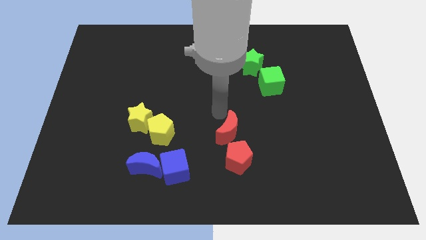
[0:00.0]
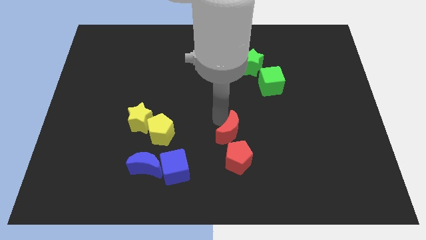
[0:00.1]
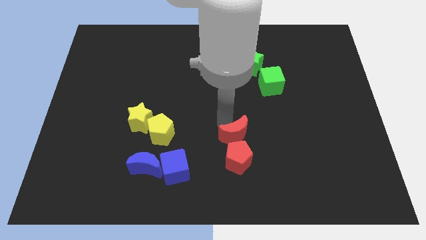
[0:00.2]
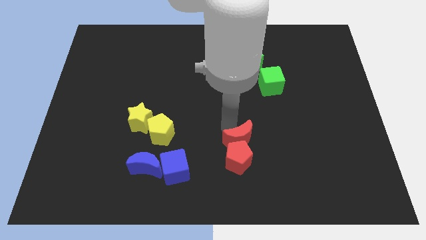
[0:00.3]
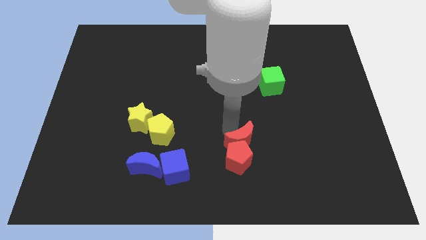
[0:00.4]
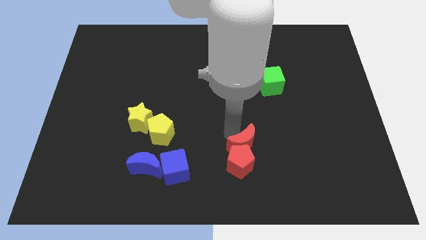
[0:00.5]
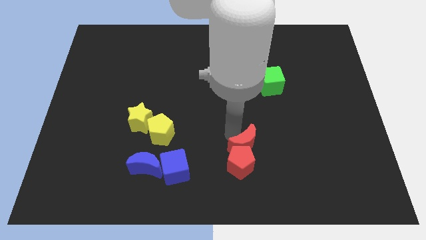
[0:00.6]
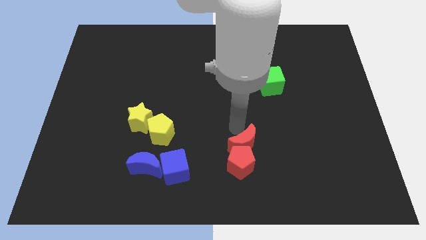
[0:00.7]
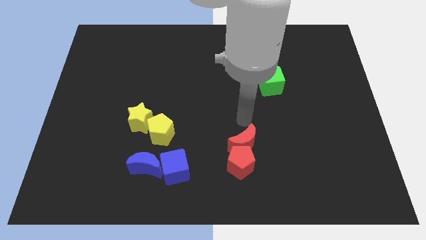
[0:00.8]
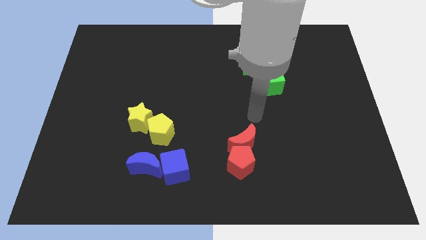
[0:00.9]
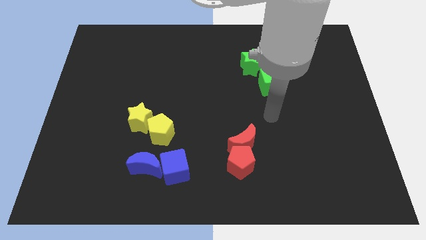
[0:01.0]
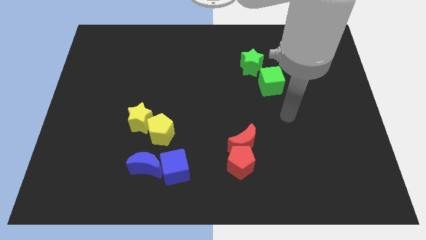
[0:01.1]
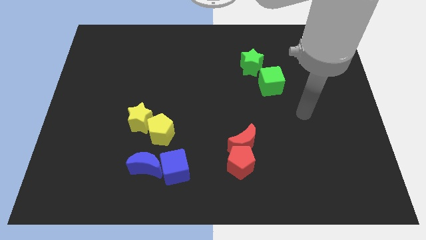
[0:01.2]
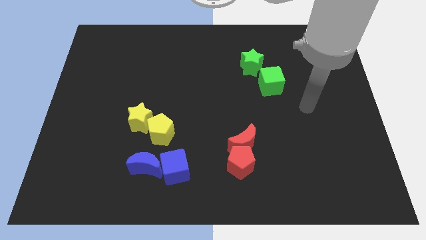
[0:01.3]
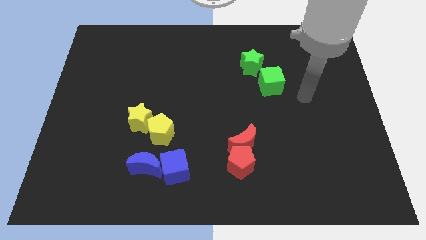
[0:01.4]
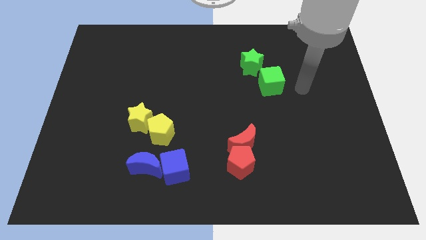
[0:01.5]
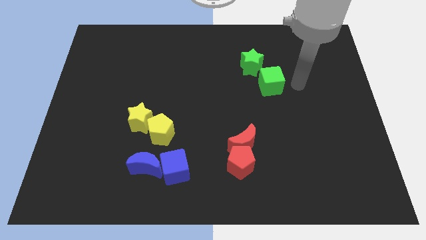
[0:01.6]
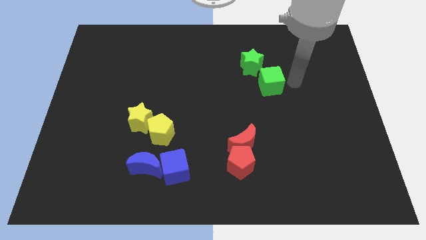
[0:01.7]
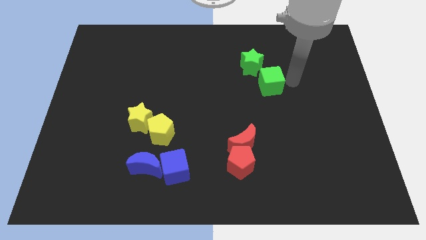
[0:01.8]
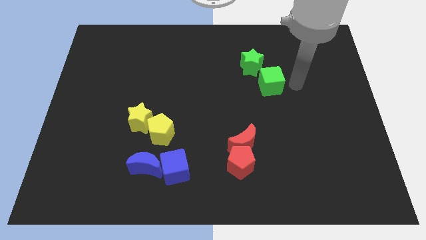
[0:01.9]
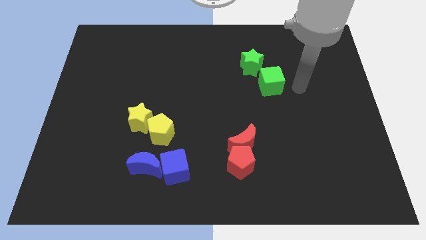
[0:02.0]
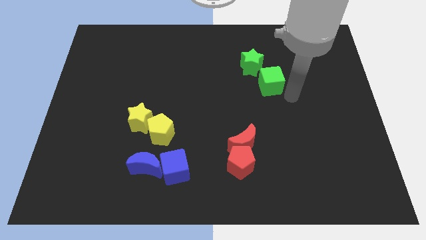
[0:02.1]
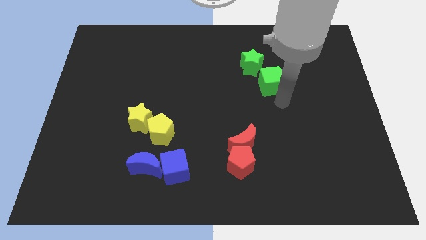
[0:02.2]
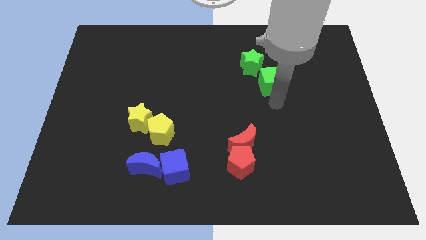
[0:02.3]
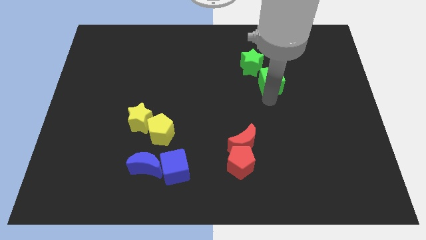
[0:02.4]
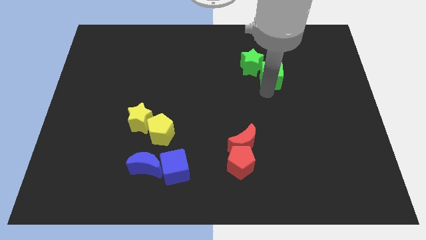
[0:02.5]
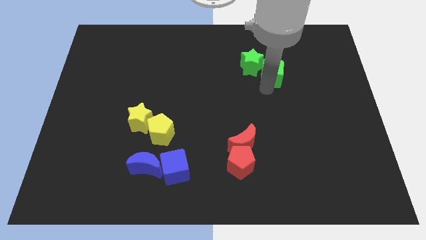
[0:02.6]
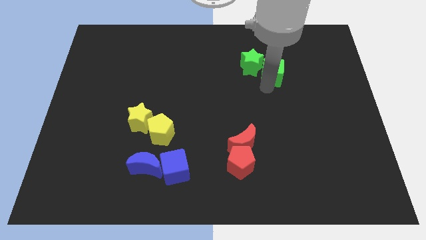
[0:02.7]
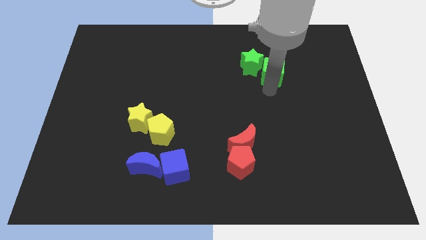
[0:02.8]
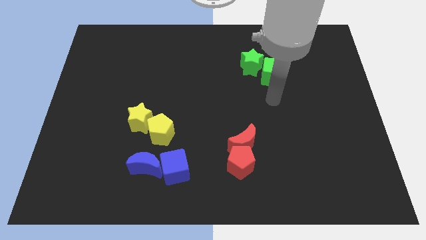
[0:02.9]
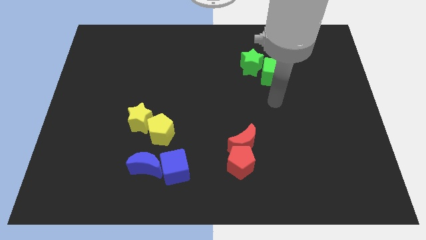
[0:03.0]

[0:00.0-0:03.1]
attach red moon to the red pentagon

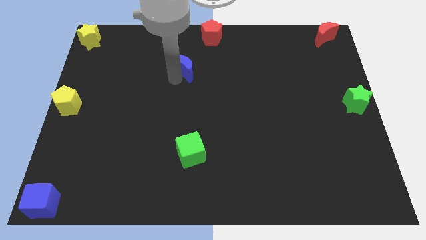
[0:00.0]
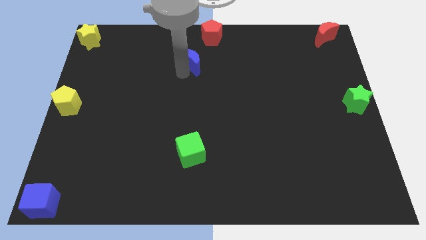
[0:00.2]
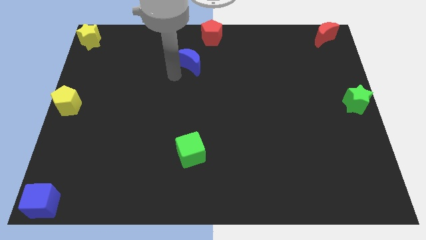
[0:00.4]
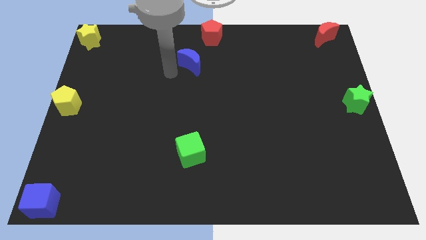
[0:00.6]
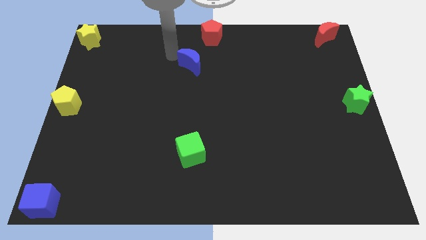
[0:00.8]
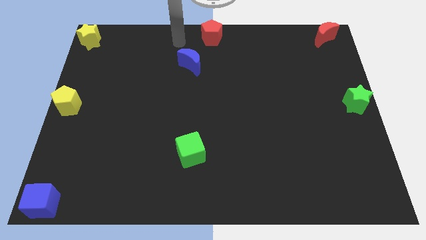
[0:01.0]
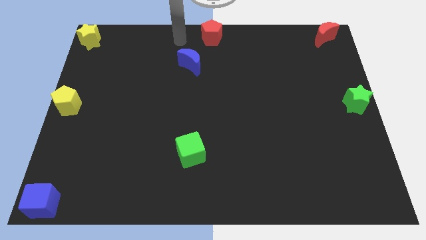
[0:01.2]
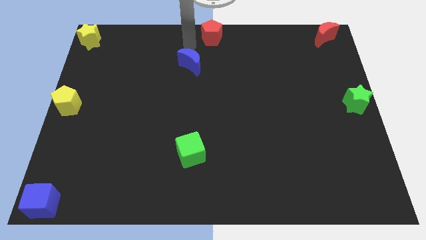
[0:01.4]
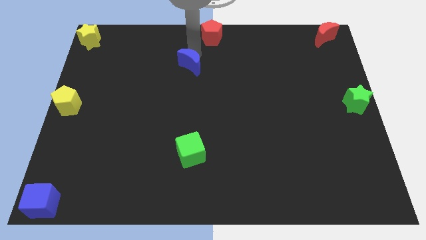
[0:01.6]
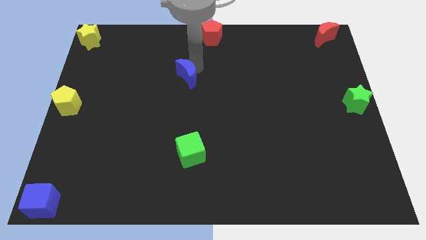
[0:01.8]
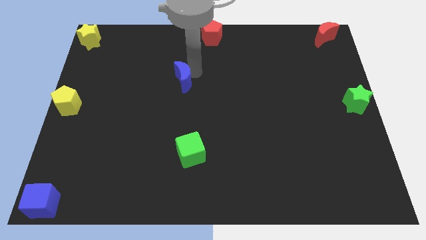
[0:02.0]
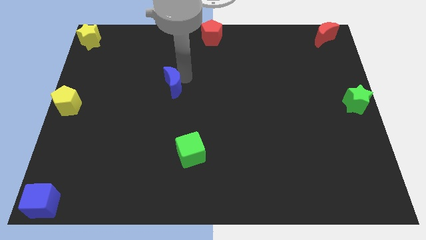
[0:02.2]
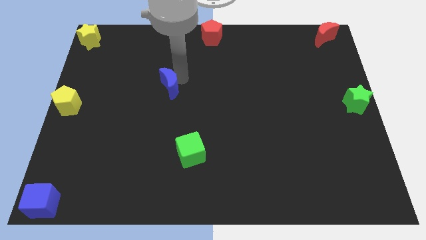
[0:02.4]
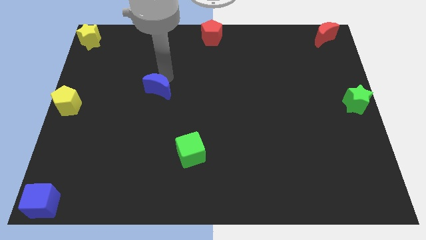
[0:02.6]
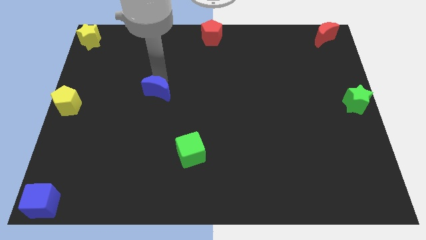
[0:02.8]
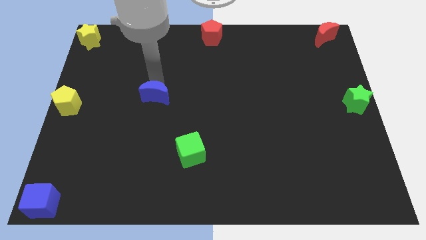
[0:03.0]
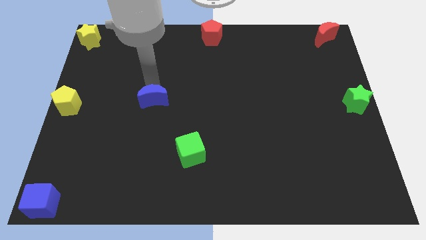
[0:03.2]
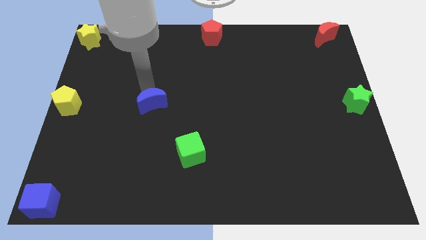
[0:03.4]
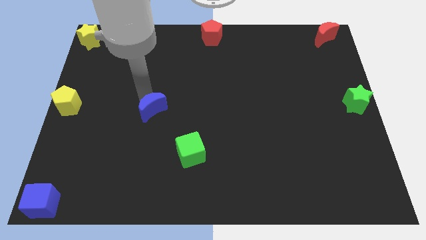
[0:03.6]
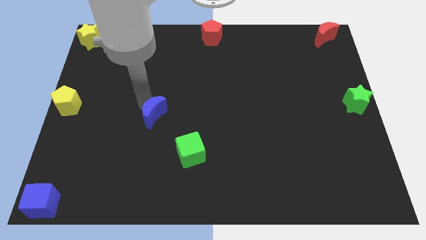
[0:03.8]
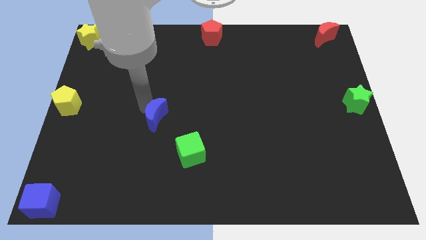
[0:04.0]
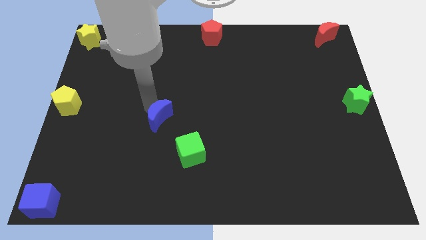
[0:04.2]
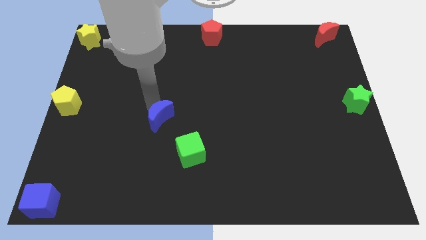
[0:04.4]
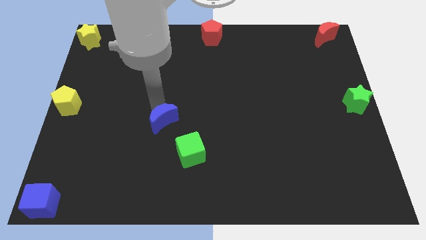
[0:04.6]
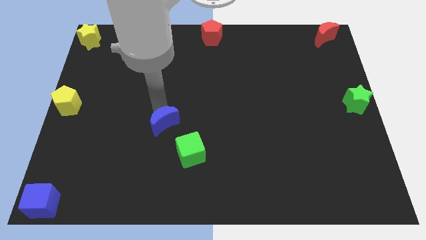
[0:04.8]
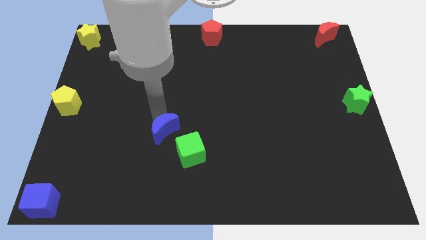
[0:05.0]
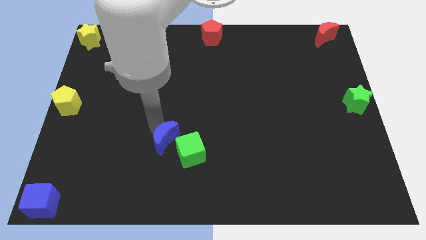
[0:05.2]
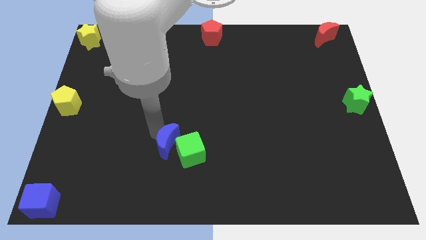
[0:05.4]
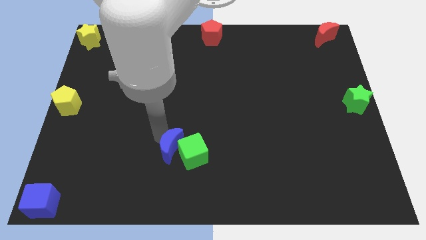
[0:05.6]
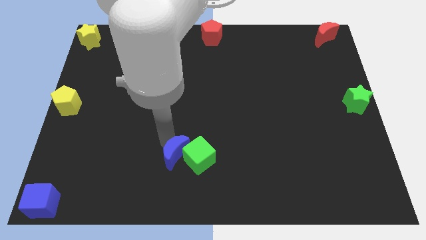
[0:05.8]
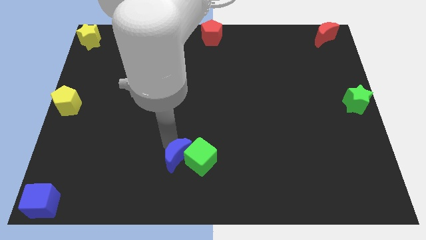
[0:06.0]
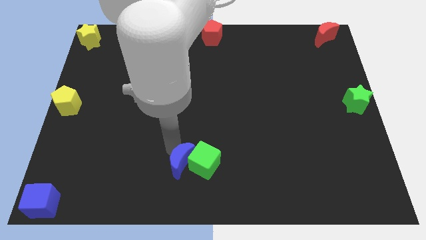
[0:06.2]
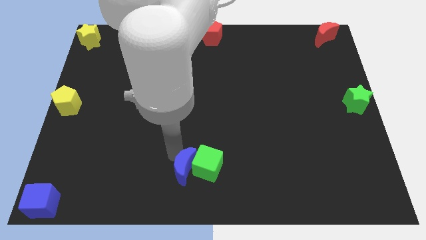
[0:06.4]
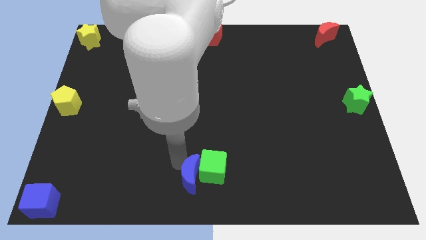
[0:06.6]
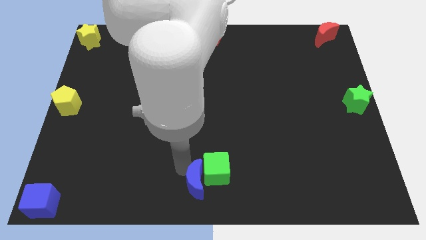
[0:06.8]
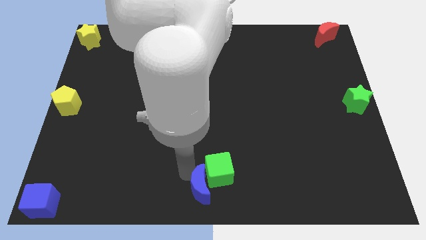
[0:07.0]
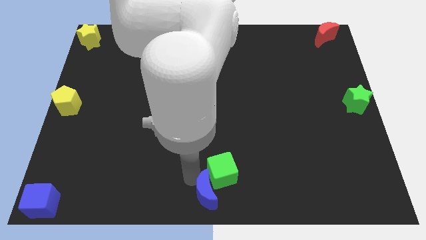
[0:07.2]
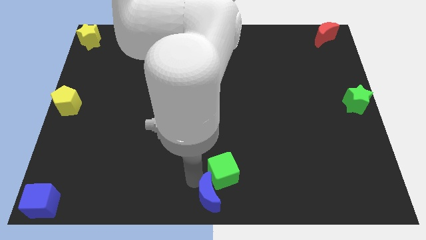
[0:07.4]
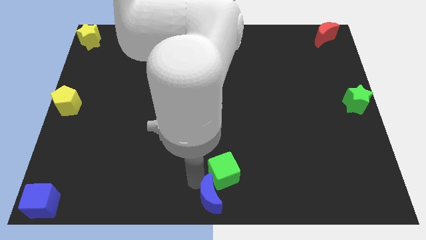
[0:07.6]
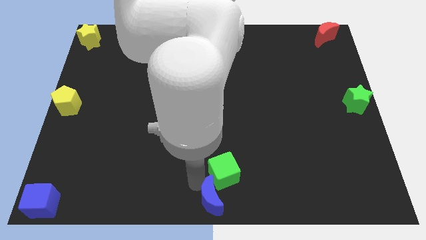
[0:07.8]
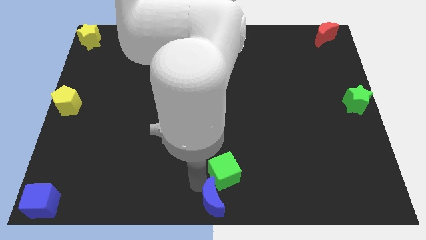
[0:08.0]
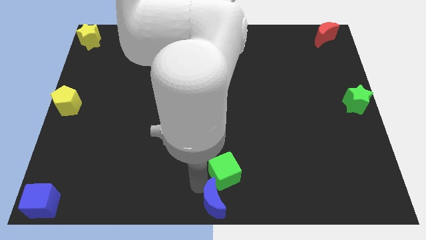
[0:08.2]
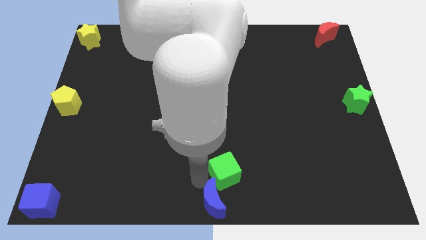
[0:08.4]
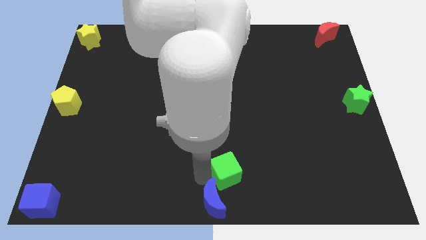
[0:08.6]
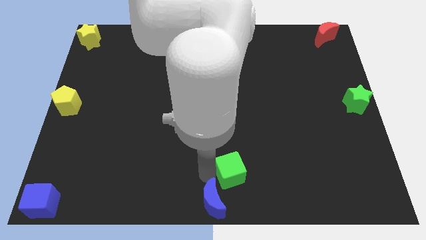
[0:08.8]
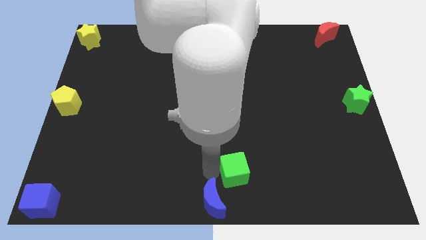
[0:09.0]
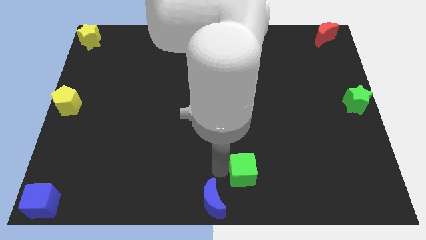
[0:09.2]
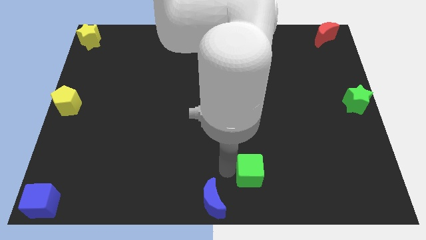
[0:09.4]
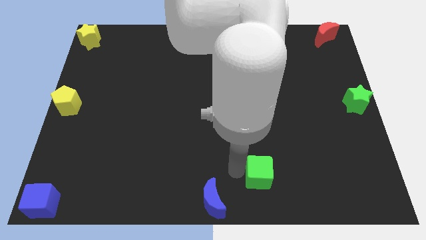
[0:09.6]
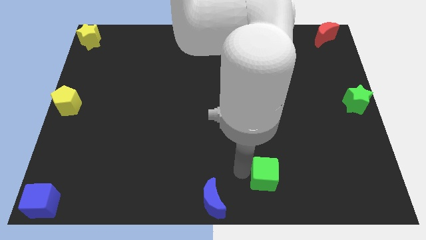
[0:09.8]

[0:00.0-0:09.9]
place blue crescent on the bottom center of the board

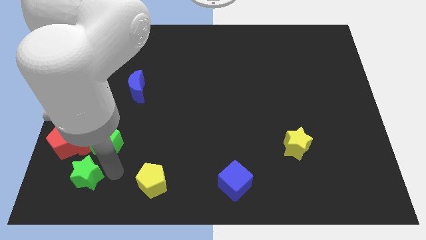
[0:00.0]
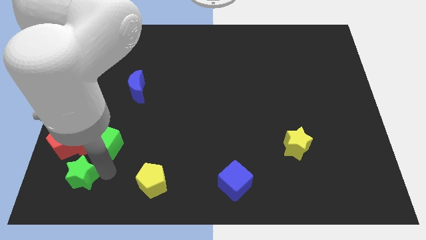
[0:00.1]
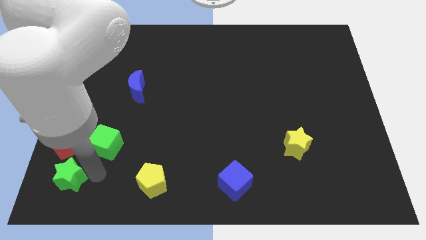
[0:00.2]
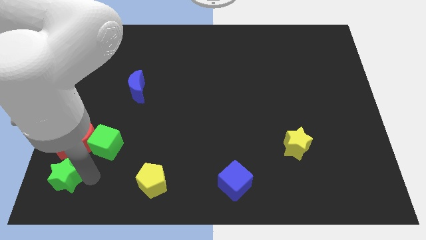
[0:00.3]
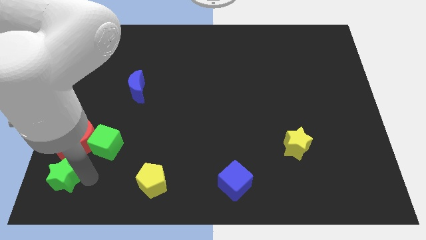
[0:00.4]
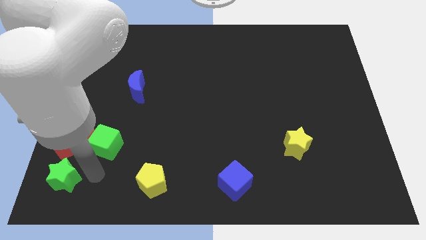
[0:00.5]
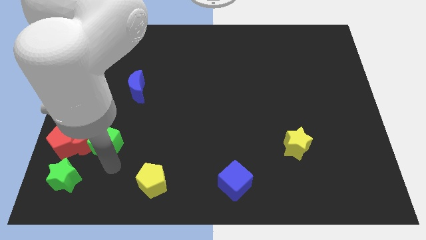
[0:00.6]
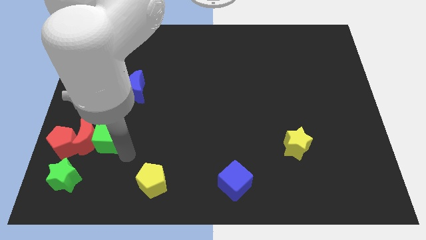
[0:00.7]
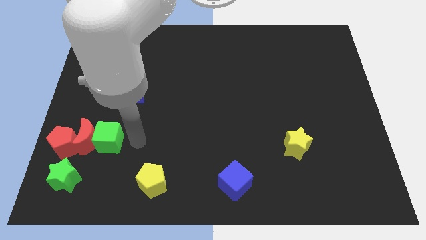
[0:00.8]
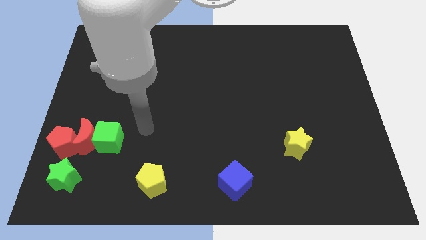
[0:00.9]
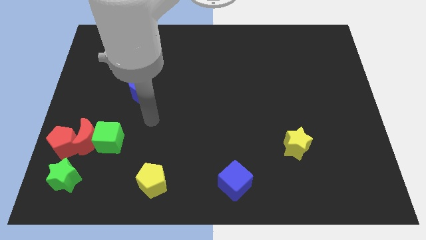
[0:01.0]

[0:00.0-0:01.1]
slightly push the green star to left
